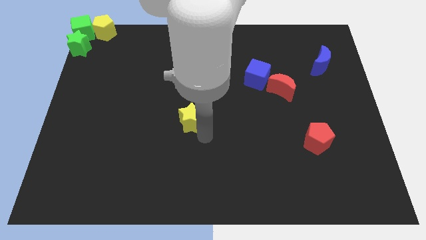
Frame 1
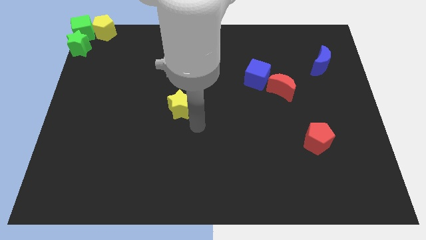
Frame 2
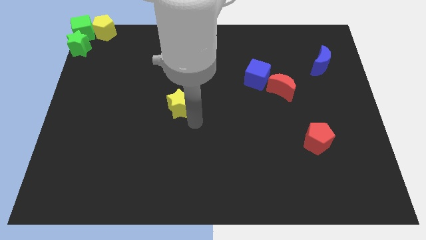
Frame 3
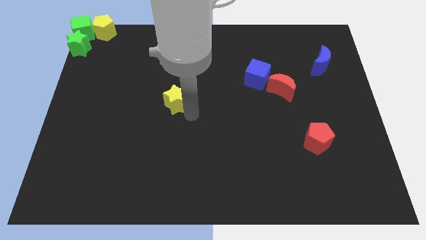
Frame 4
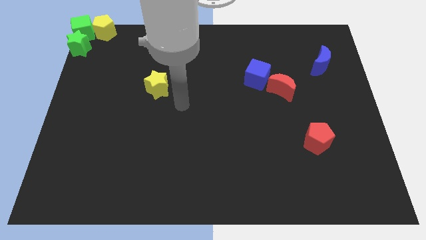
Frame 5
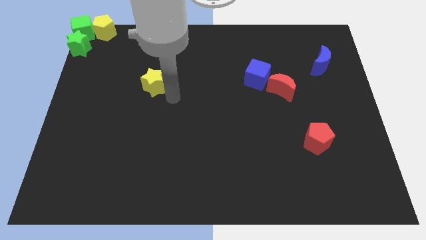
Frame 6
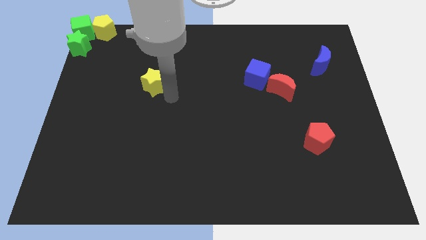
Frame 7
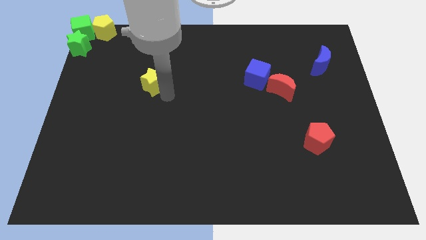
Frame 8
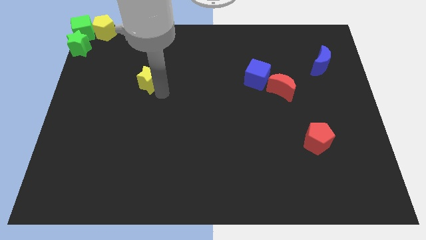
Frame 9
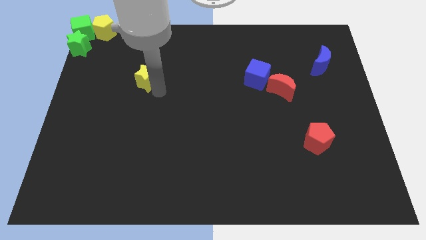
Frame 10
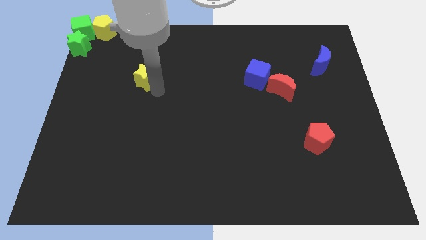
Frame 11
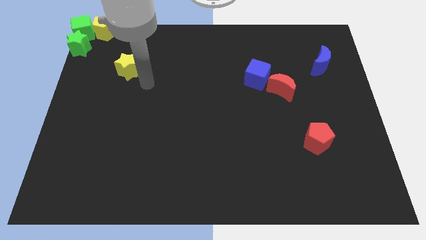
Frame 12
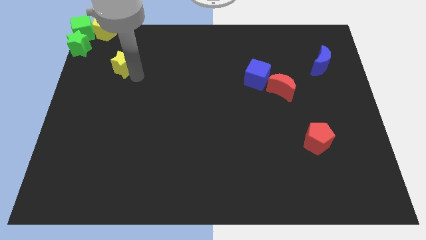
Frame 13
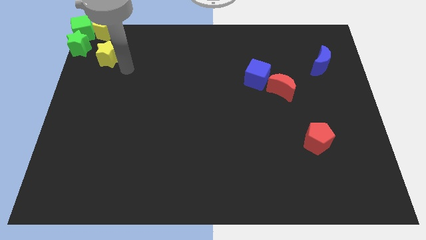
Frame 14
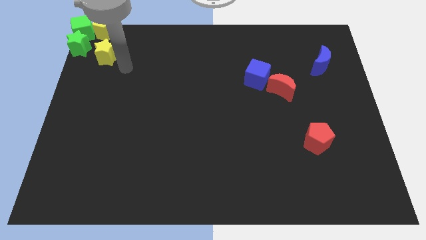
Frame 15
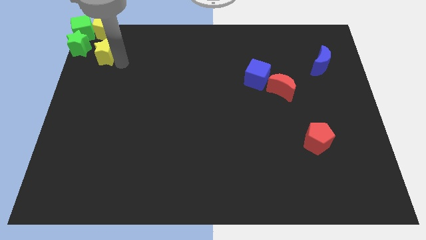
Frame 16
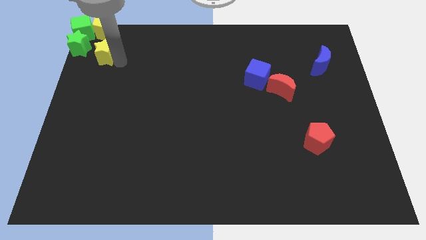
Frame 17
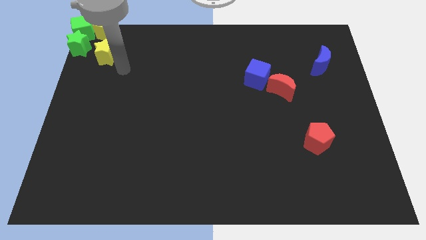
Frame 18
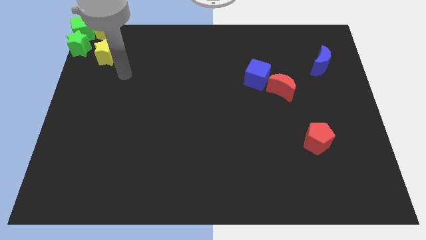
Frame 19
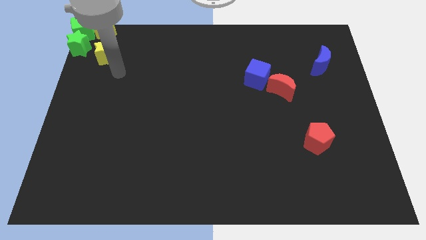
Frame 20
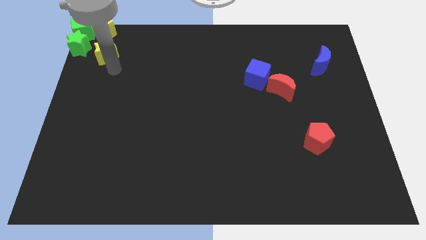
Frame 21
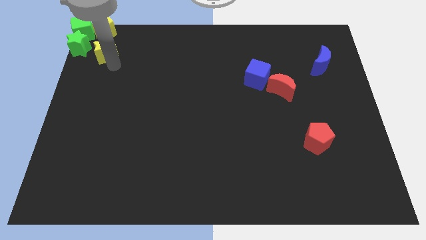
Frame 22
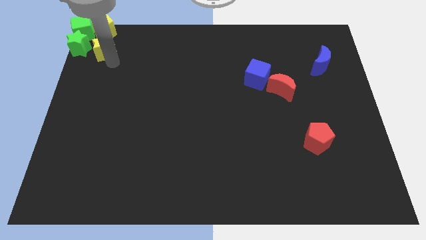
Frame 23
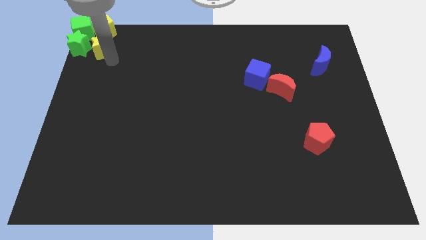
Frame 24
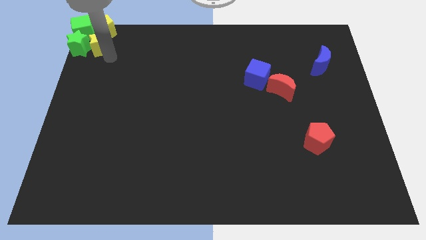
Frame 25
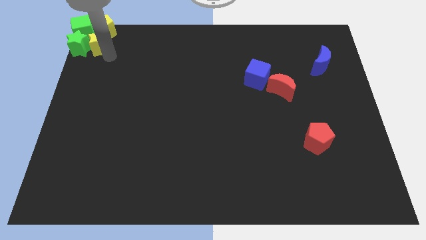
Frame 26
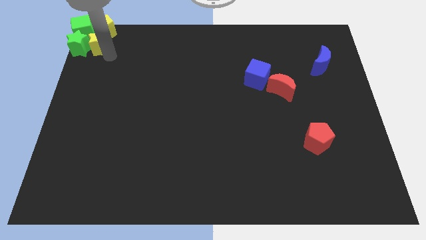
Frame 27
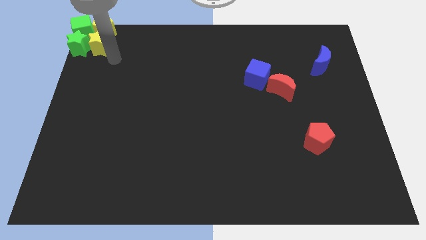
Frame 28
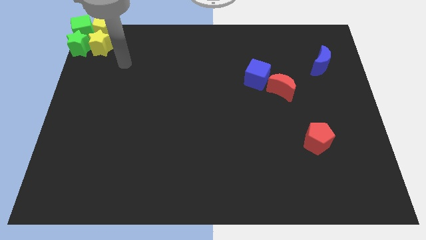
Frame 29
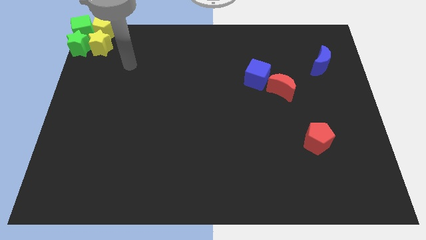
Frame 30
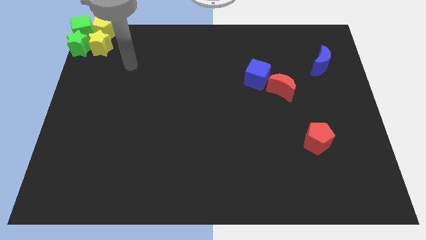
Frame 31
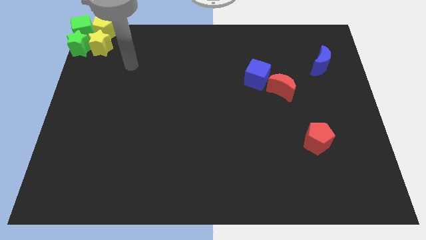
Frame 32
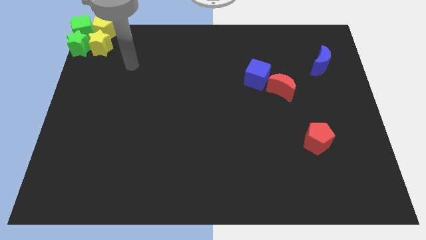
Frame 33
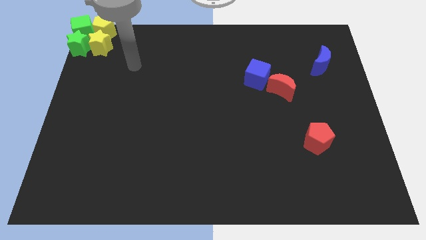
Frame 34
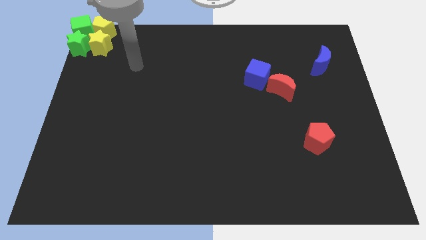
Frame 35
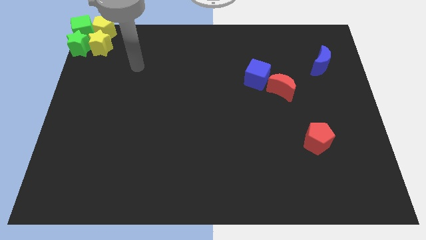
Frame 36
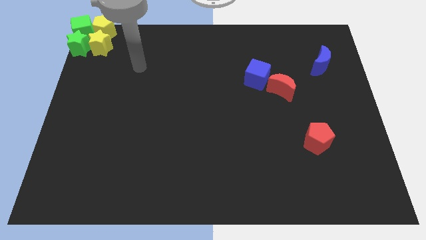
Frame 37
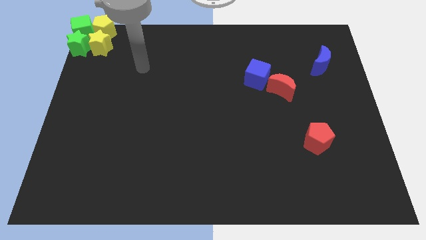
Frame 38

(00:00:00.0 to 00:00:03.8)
push yellow star right to the green cube

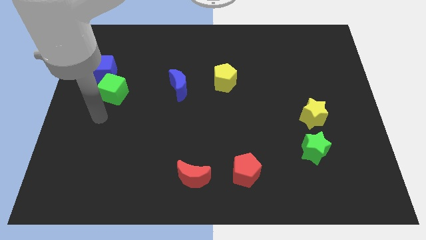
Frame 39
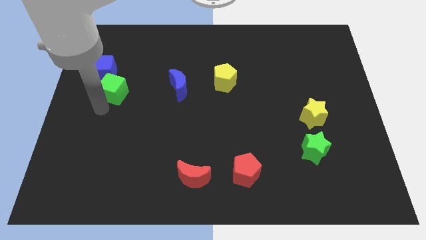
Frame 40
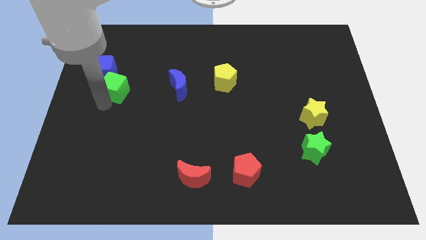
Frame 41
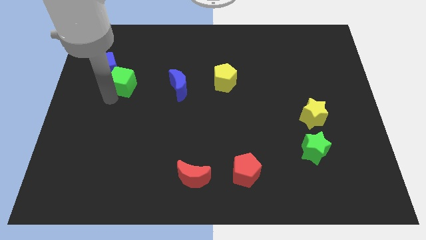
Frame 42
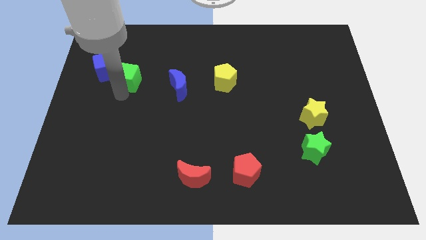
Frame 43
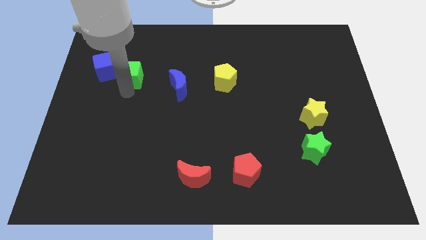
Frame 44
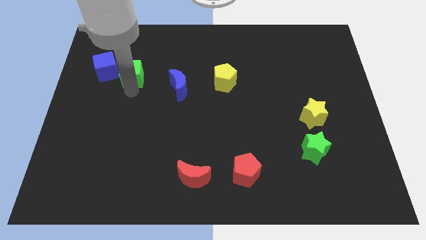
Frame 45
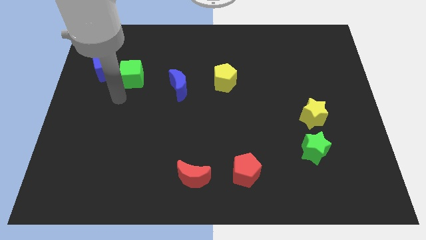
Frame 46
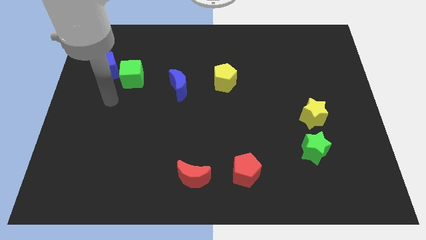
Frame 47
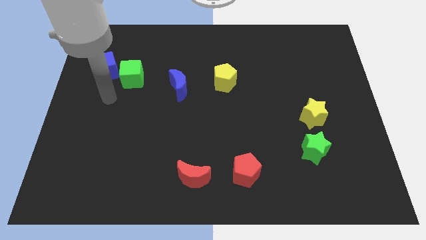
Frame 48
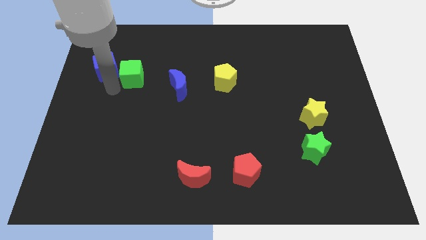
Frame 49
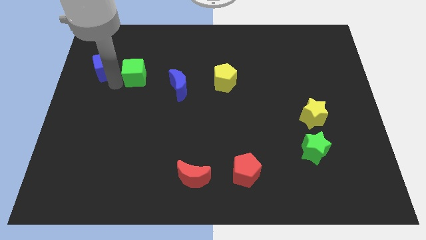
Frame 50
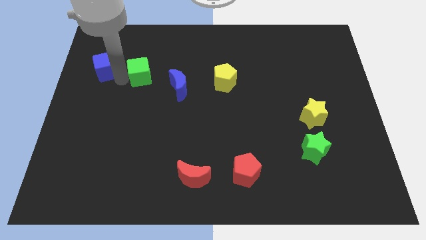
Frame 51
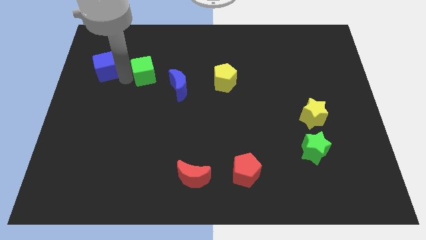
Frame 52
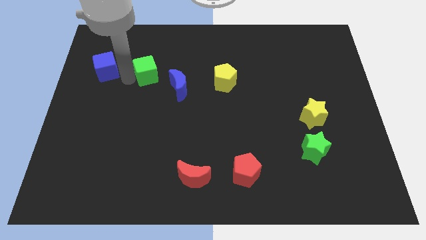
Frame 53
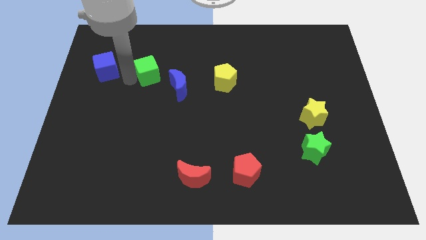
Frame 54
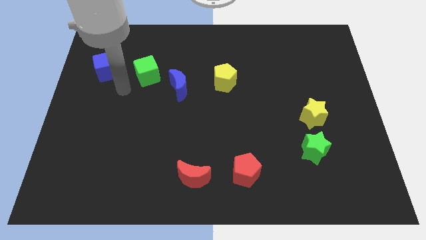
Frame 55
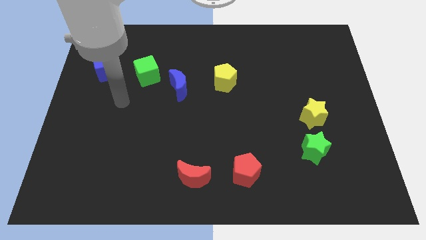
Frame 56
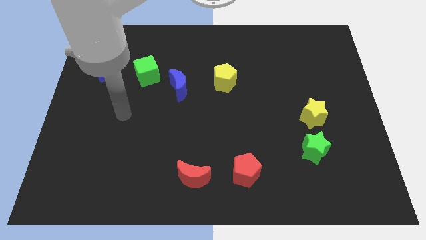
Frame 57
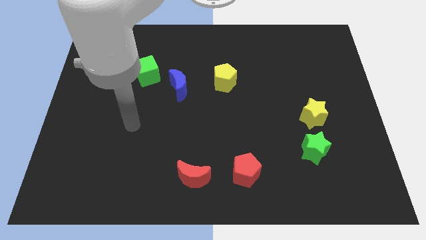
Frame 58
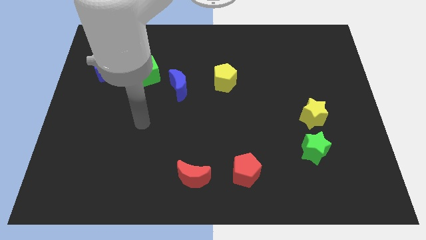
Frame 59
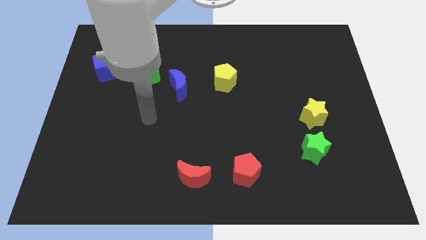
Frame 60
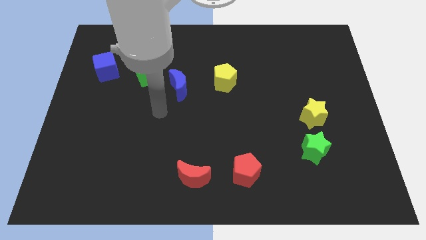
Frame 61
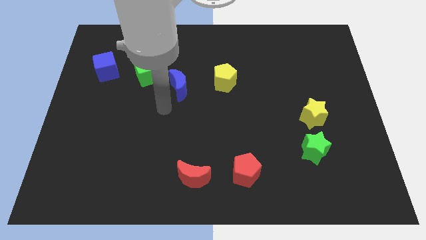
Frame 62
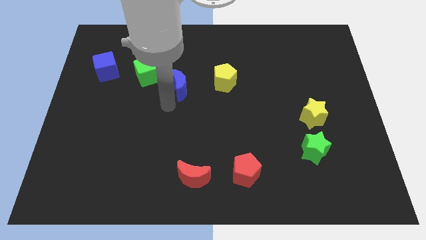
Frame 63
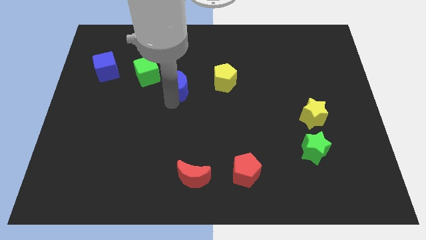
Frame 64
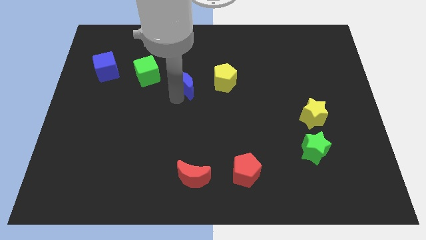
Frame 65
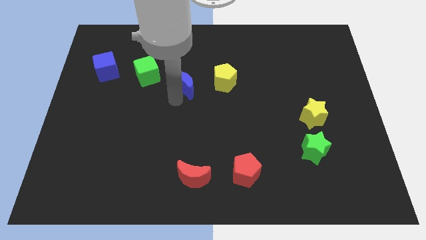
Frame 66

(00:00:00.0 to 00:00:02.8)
move green cube upwards

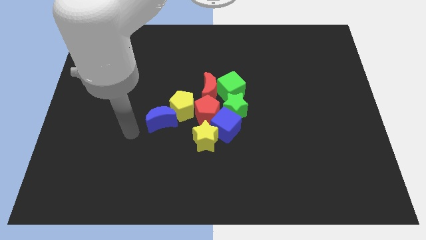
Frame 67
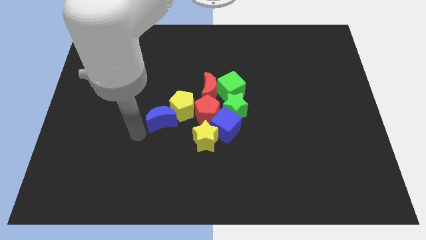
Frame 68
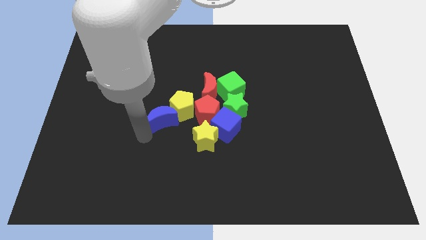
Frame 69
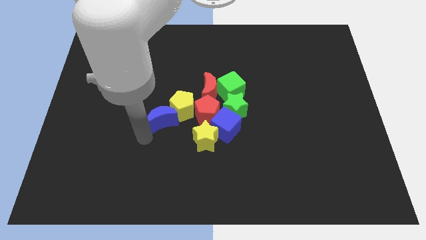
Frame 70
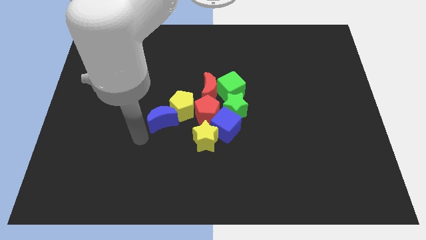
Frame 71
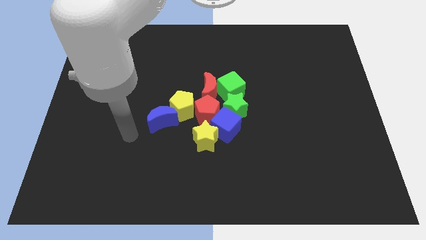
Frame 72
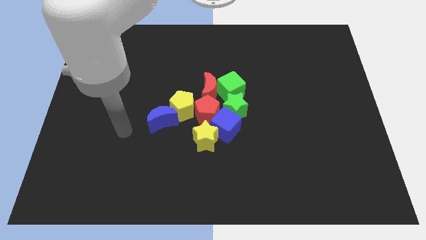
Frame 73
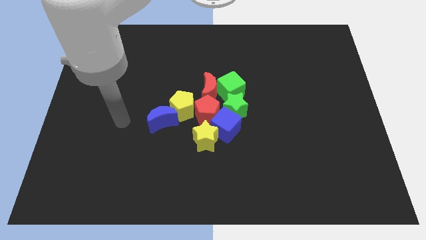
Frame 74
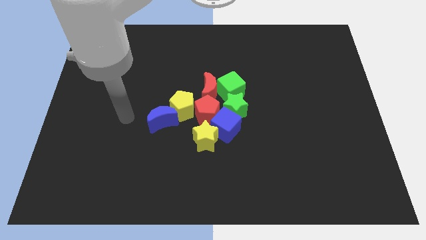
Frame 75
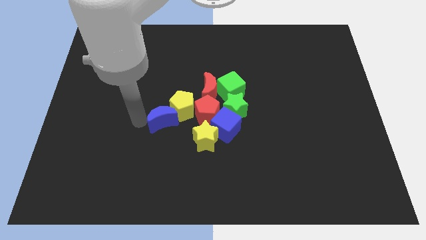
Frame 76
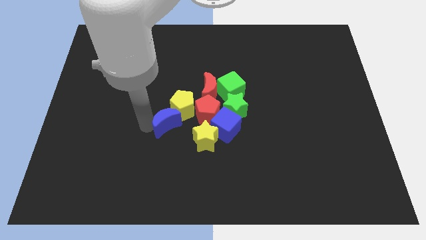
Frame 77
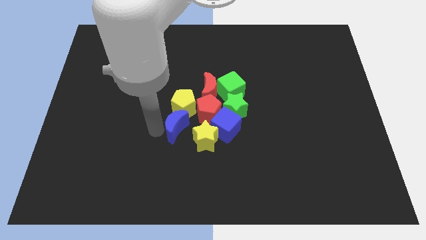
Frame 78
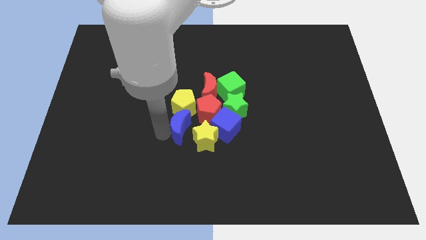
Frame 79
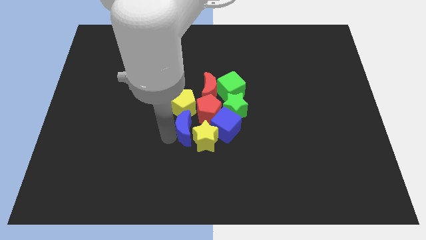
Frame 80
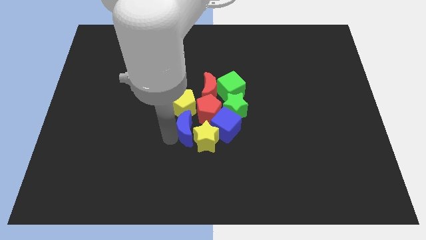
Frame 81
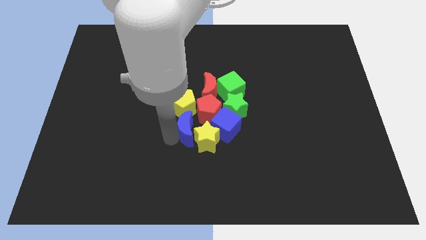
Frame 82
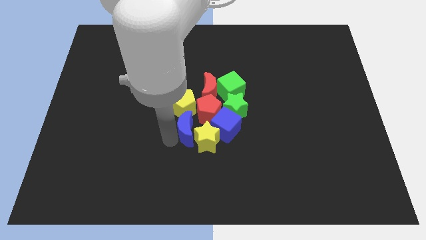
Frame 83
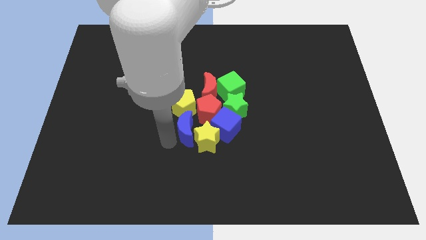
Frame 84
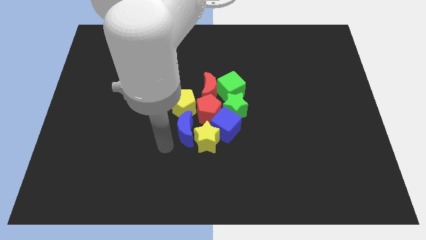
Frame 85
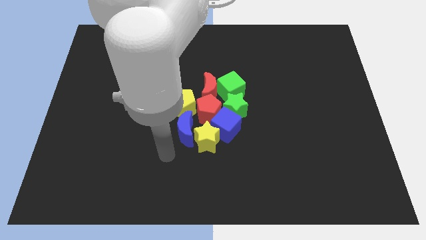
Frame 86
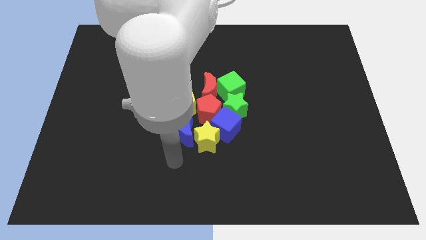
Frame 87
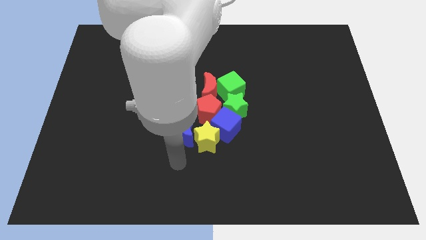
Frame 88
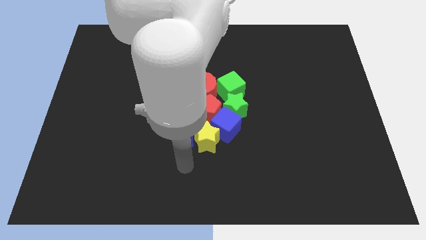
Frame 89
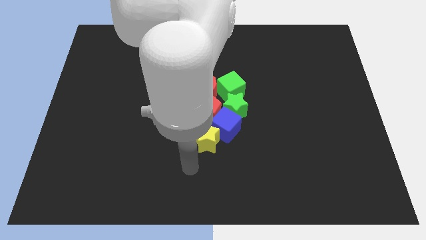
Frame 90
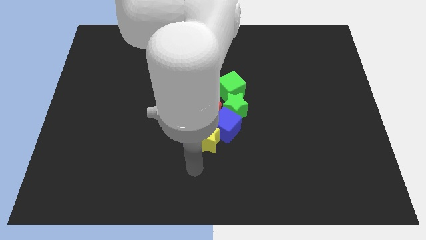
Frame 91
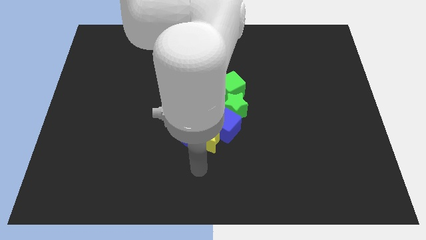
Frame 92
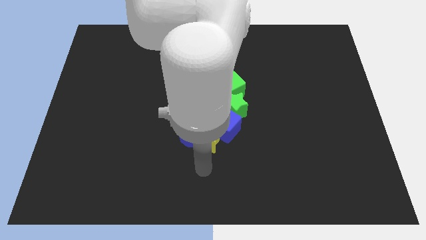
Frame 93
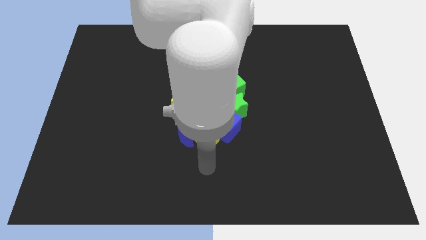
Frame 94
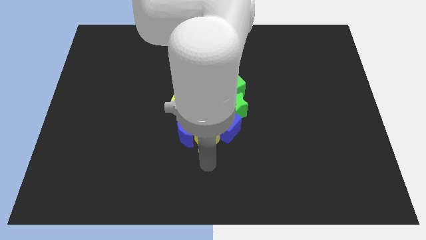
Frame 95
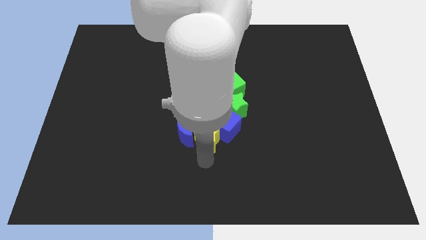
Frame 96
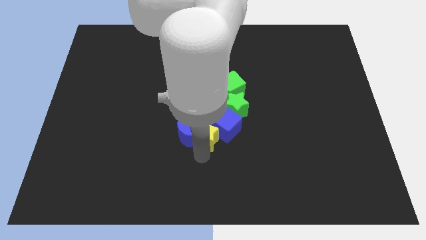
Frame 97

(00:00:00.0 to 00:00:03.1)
adjust the blue moon vertically below the yellow pentagon
